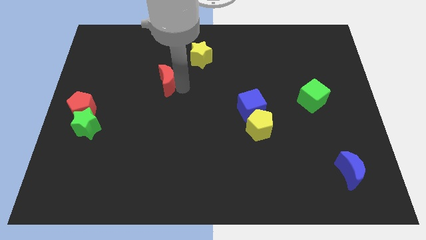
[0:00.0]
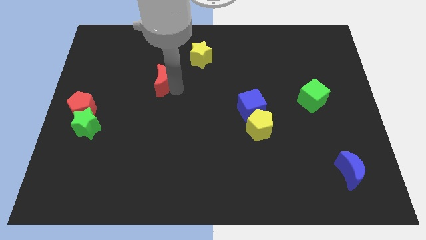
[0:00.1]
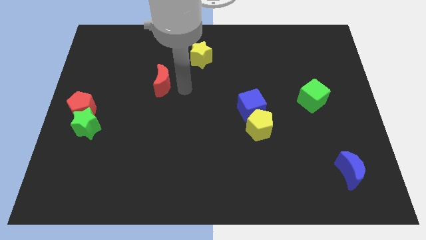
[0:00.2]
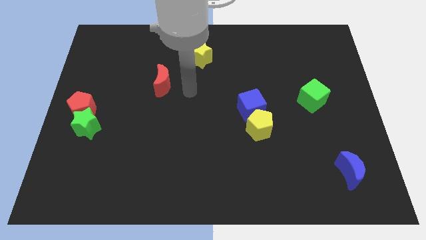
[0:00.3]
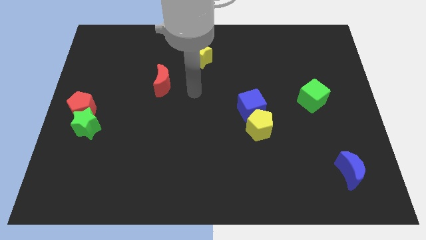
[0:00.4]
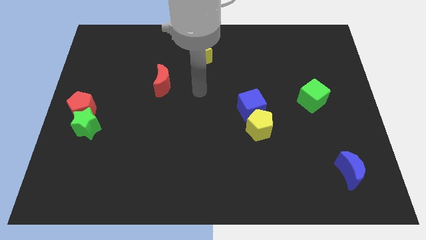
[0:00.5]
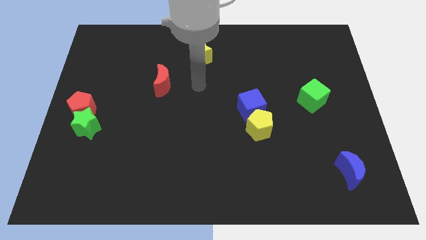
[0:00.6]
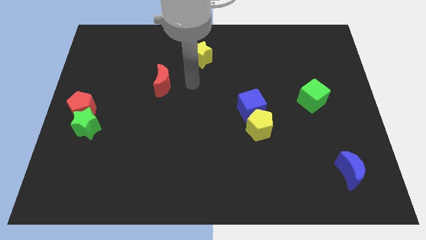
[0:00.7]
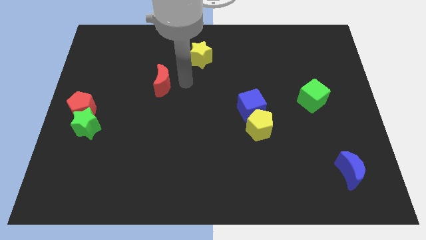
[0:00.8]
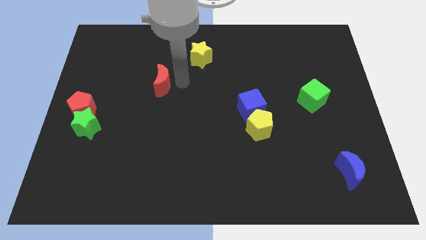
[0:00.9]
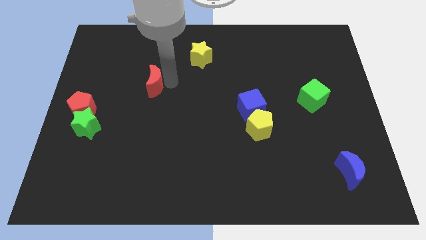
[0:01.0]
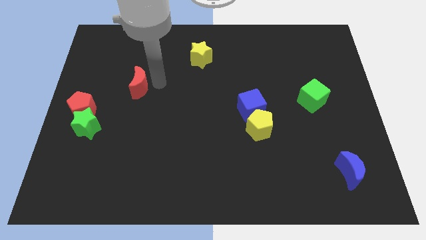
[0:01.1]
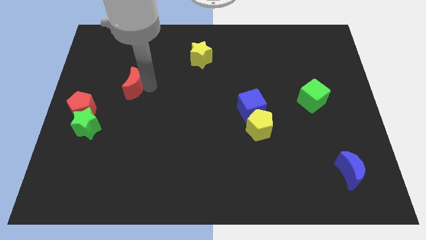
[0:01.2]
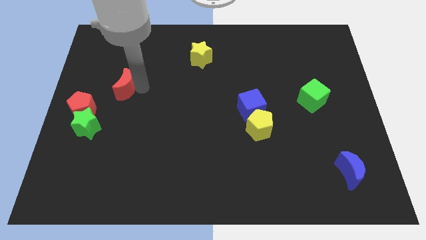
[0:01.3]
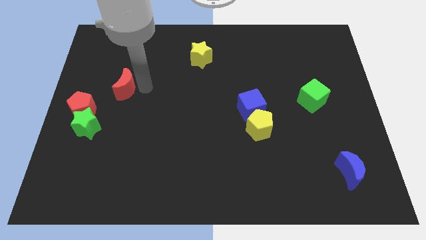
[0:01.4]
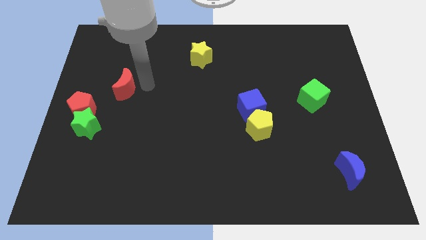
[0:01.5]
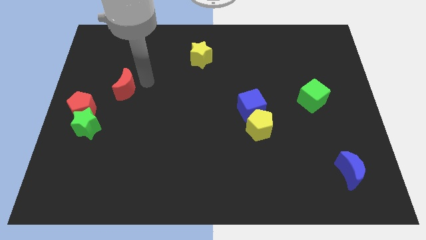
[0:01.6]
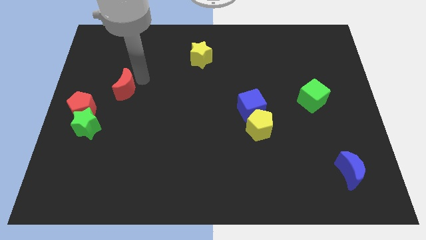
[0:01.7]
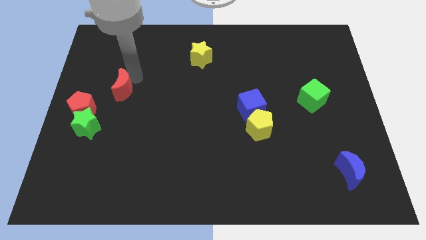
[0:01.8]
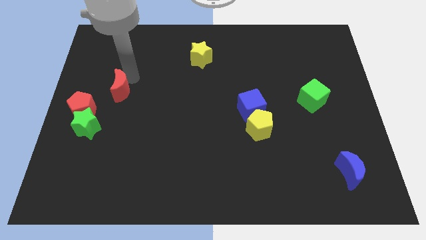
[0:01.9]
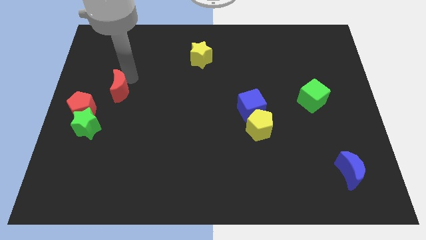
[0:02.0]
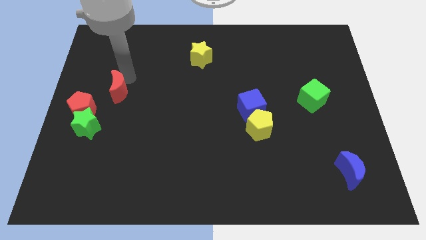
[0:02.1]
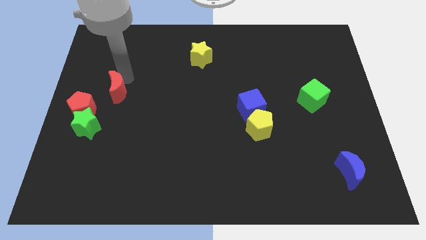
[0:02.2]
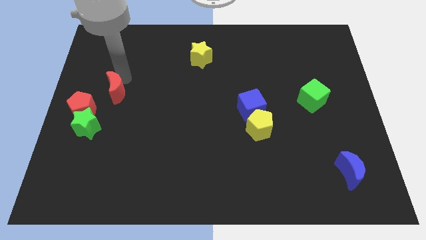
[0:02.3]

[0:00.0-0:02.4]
move the red moon towards the left

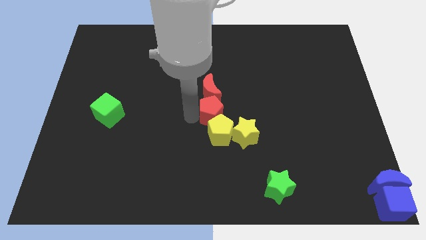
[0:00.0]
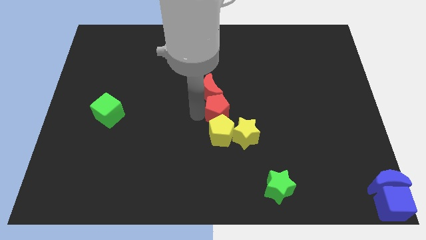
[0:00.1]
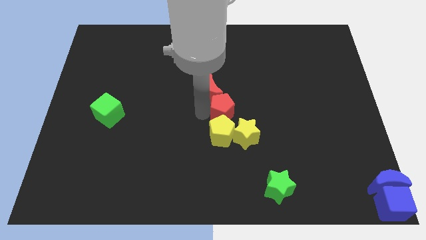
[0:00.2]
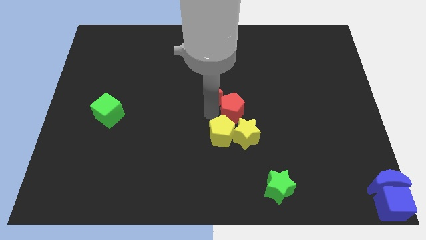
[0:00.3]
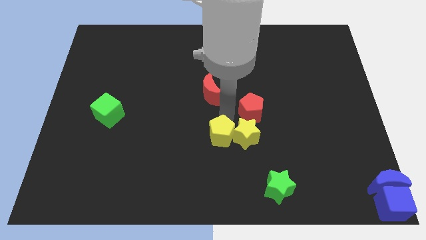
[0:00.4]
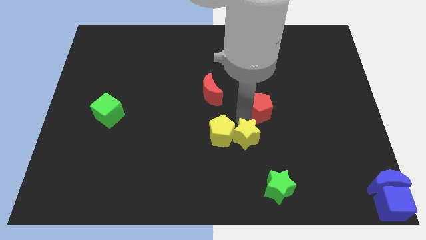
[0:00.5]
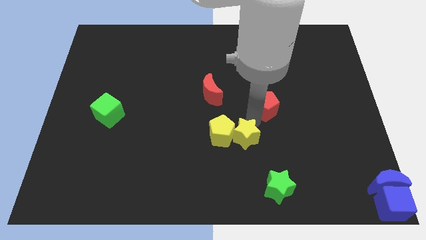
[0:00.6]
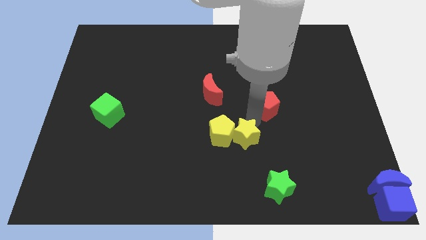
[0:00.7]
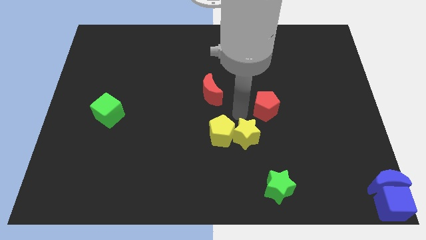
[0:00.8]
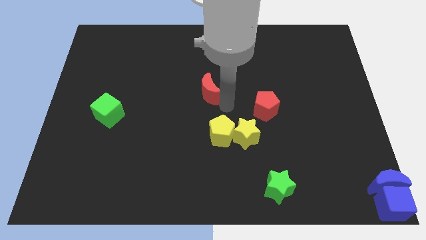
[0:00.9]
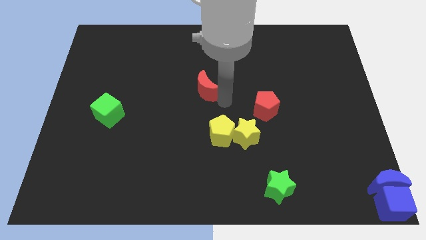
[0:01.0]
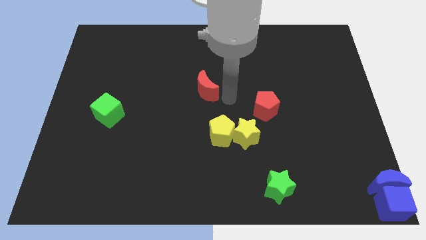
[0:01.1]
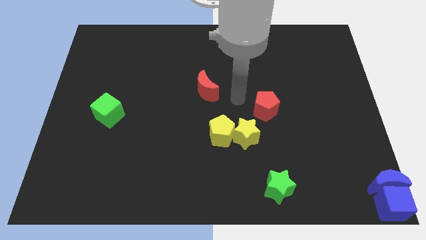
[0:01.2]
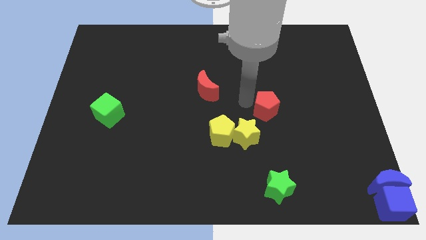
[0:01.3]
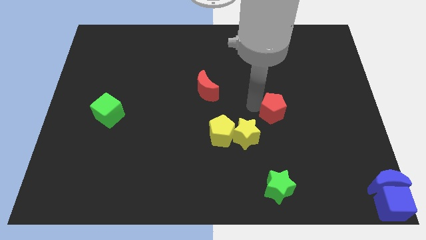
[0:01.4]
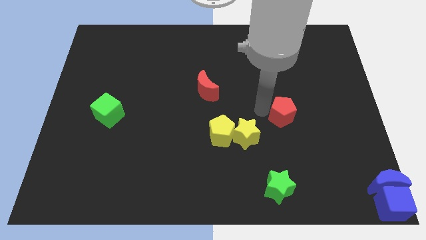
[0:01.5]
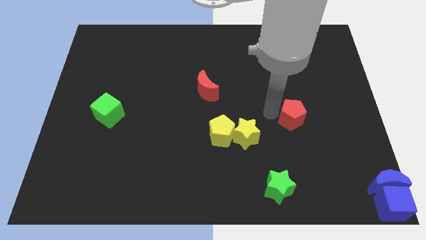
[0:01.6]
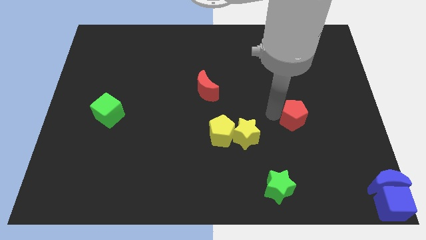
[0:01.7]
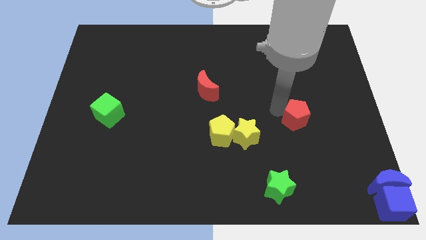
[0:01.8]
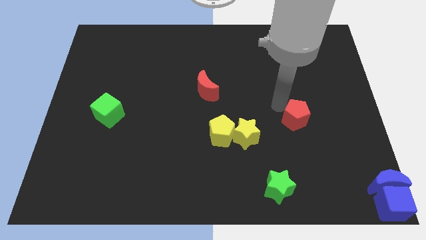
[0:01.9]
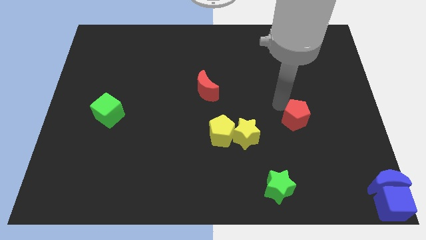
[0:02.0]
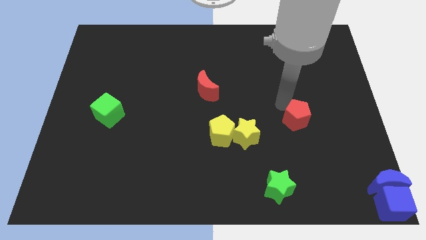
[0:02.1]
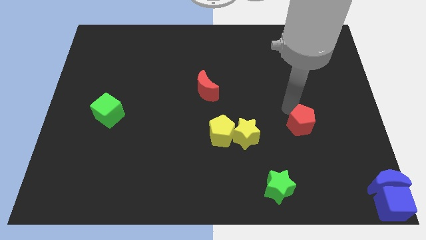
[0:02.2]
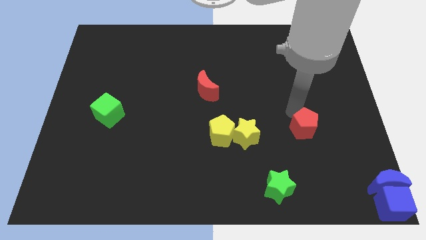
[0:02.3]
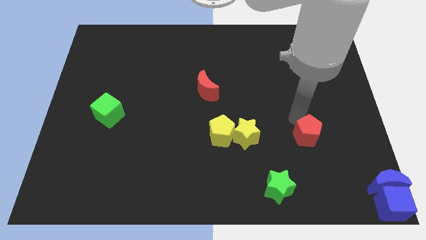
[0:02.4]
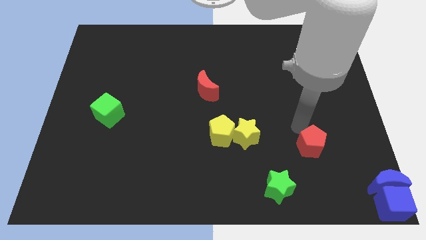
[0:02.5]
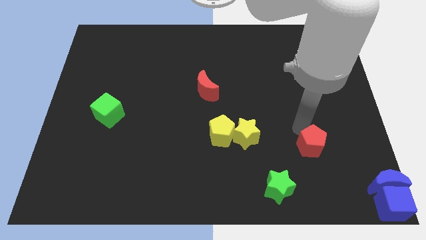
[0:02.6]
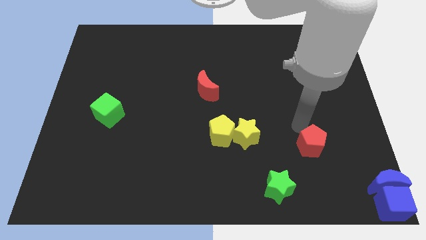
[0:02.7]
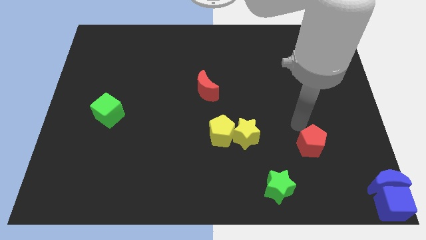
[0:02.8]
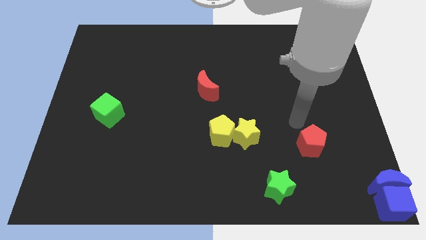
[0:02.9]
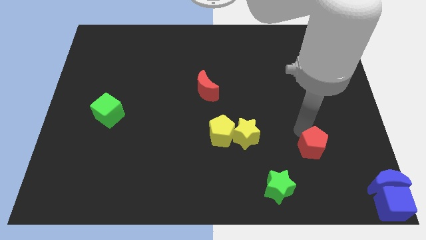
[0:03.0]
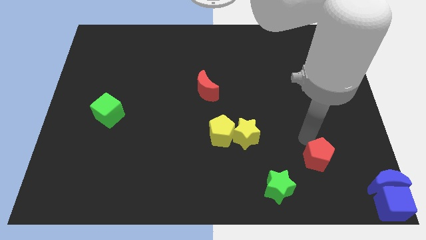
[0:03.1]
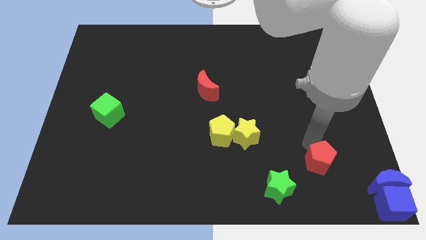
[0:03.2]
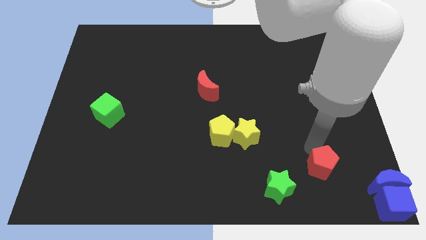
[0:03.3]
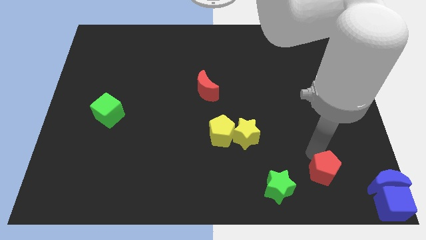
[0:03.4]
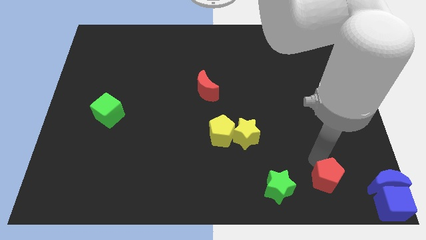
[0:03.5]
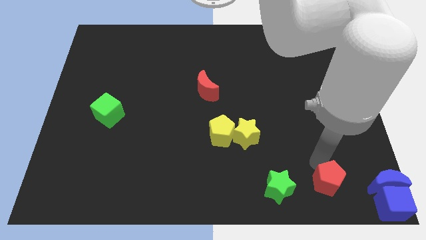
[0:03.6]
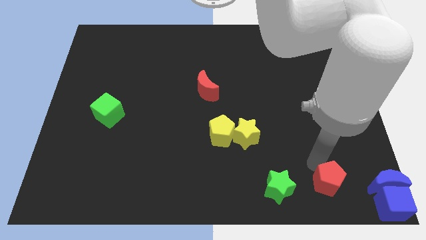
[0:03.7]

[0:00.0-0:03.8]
separate red pentagon from red moon

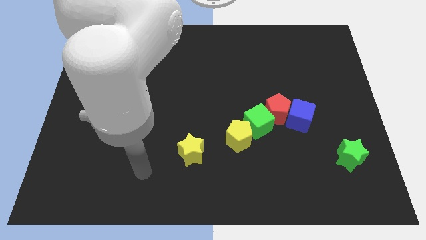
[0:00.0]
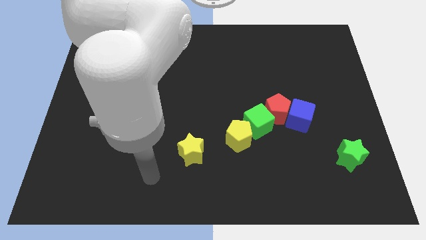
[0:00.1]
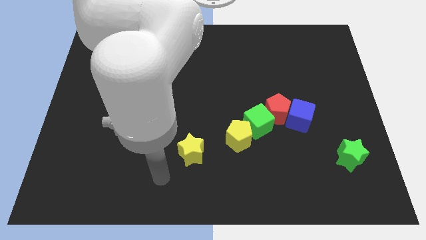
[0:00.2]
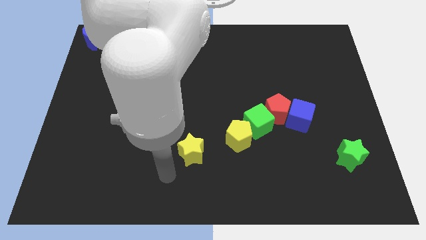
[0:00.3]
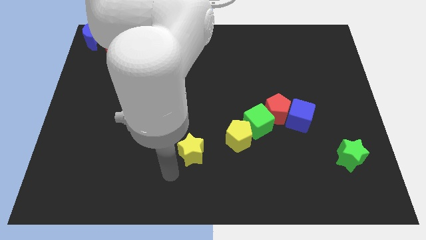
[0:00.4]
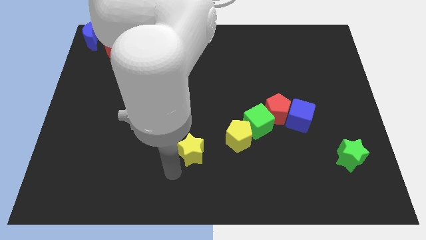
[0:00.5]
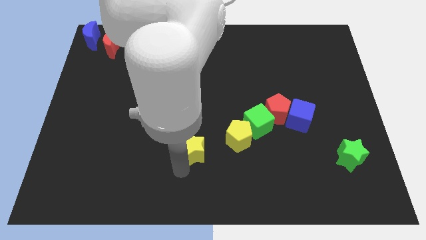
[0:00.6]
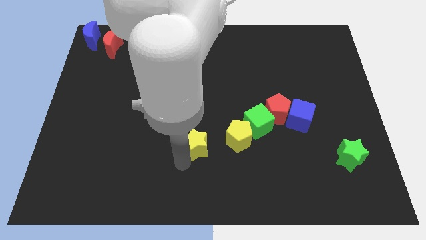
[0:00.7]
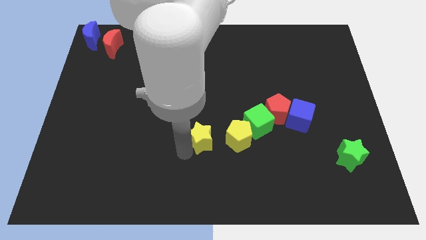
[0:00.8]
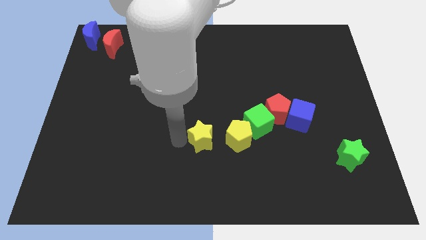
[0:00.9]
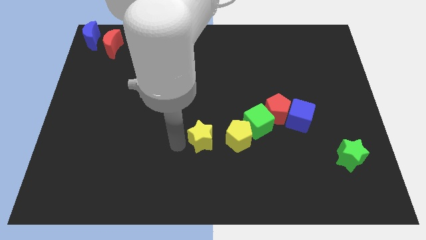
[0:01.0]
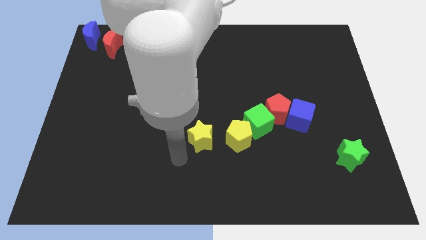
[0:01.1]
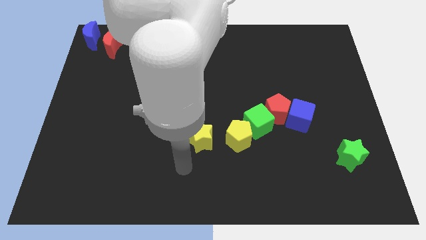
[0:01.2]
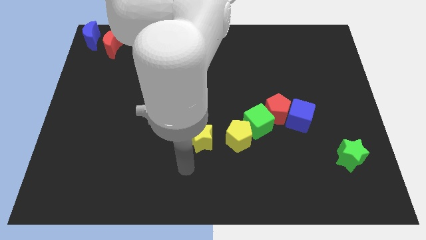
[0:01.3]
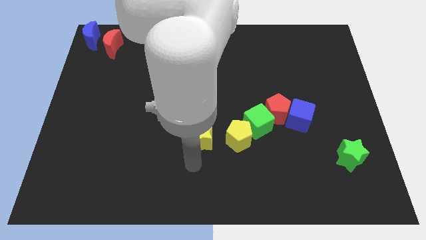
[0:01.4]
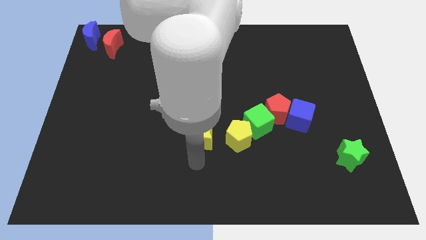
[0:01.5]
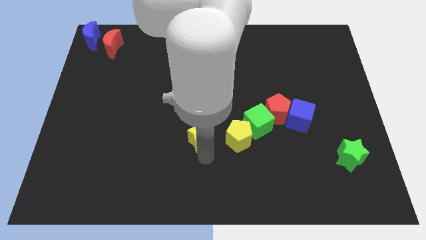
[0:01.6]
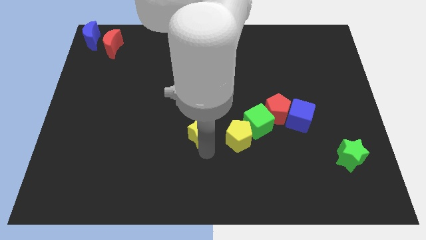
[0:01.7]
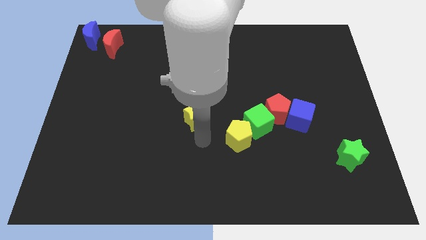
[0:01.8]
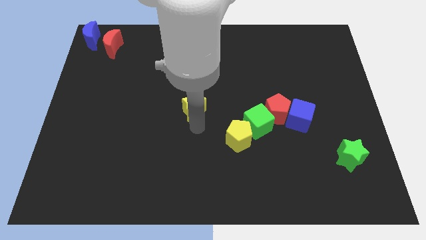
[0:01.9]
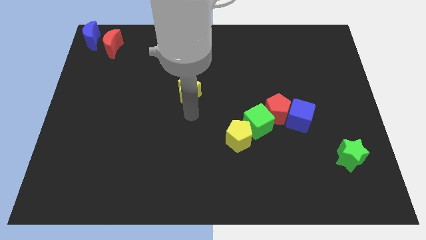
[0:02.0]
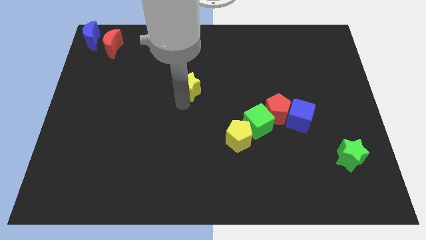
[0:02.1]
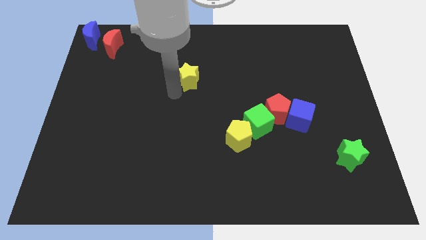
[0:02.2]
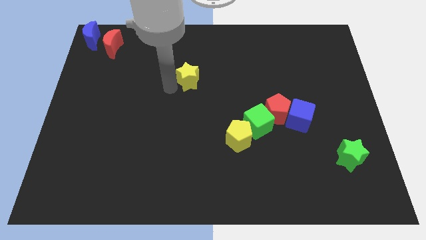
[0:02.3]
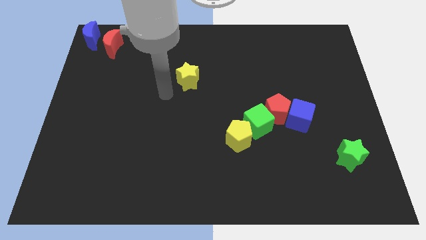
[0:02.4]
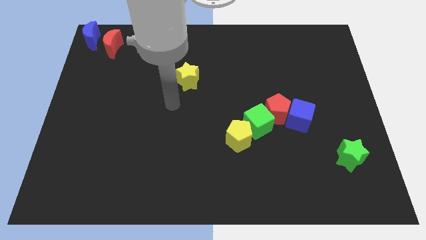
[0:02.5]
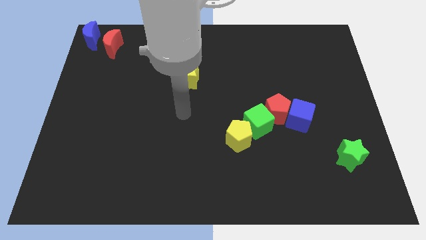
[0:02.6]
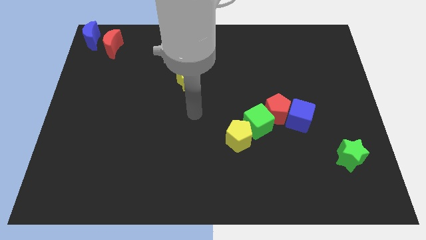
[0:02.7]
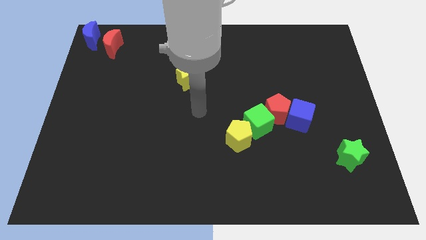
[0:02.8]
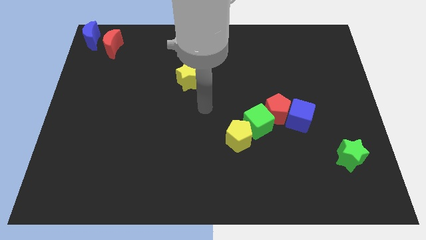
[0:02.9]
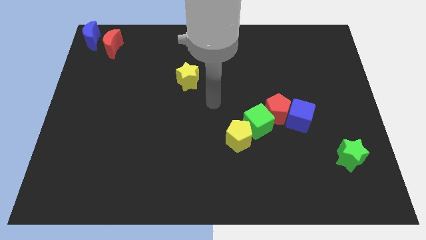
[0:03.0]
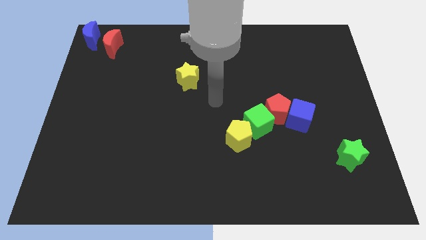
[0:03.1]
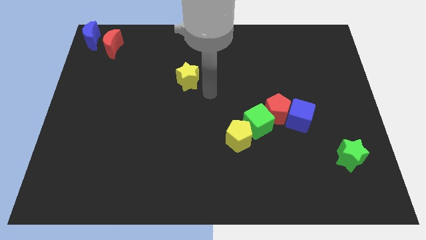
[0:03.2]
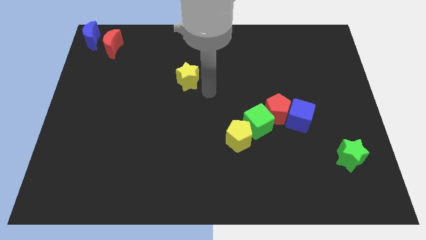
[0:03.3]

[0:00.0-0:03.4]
push yellow star to the center
